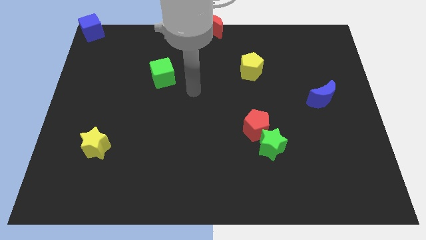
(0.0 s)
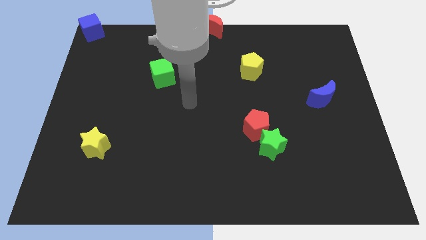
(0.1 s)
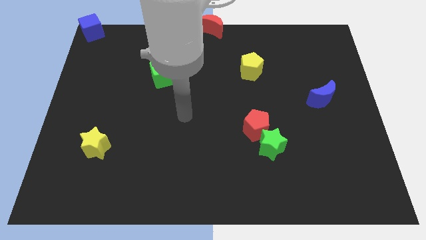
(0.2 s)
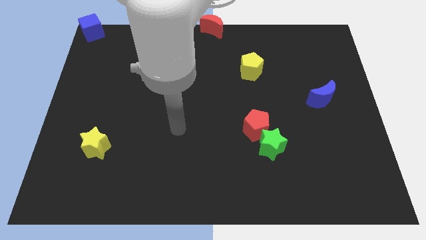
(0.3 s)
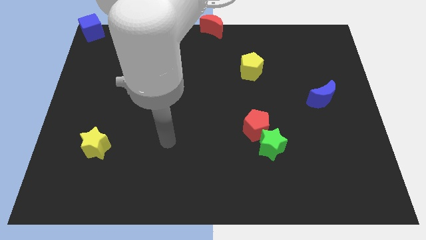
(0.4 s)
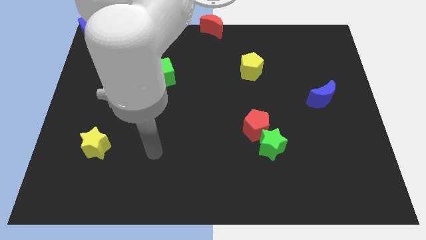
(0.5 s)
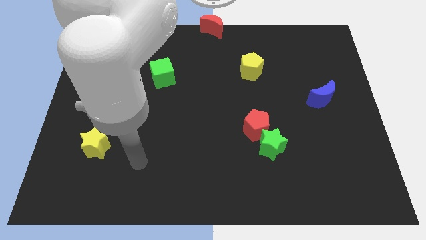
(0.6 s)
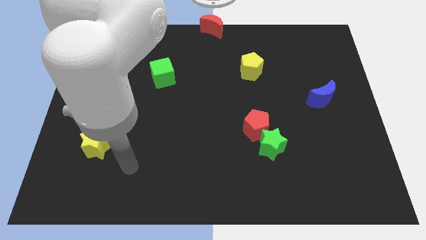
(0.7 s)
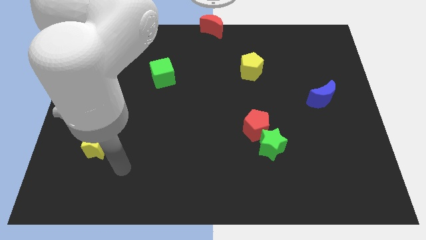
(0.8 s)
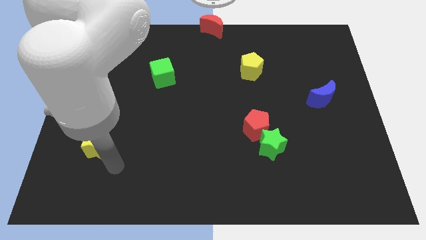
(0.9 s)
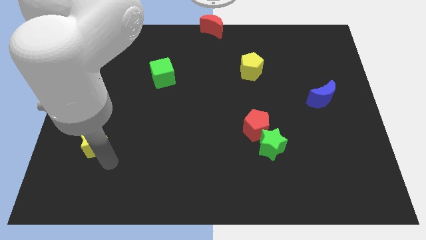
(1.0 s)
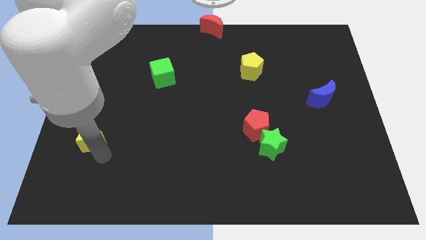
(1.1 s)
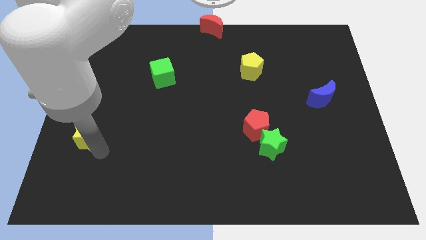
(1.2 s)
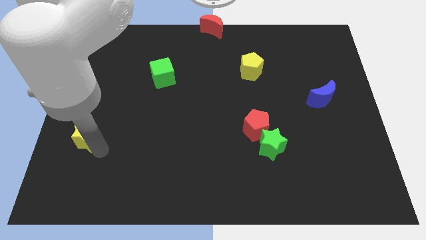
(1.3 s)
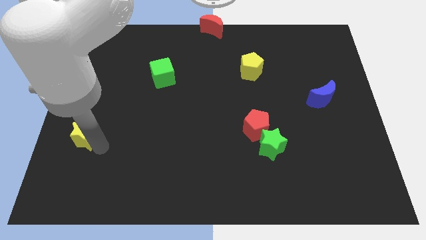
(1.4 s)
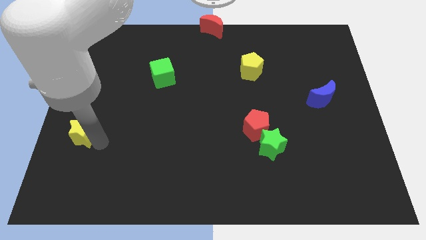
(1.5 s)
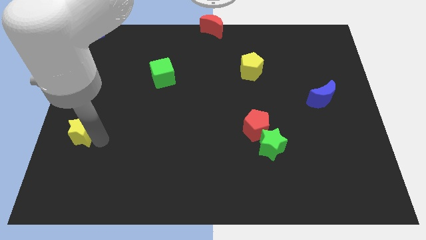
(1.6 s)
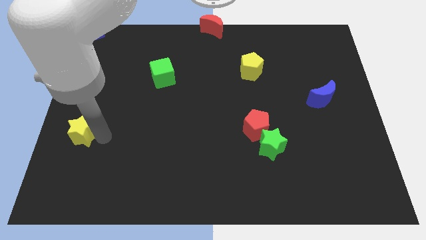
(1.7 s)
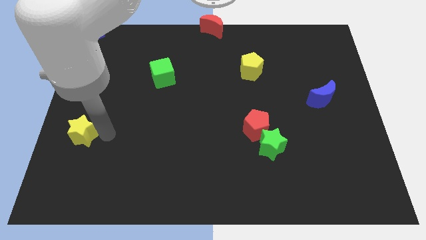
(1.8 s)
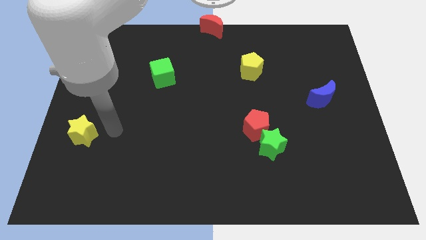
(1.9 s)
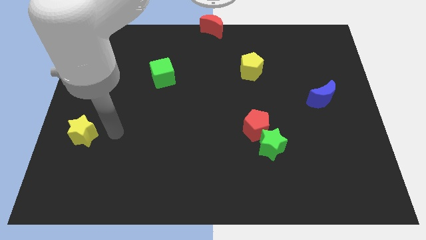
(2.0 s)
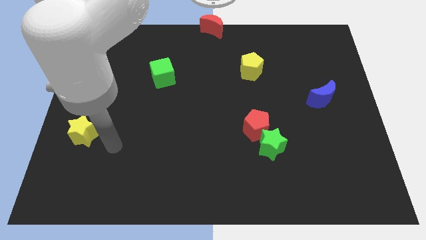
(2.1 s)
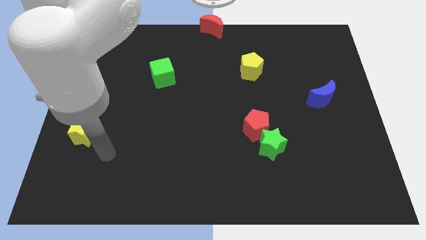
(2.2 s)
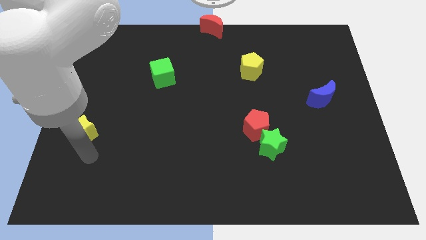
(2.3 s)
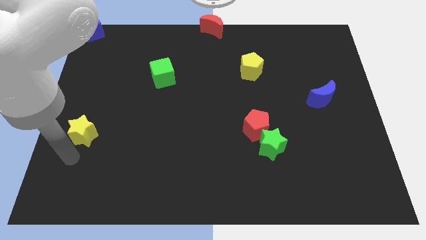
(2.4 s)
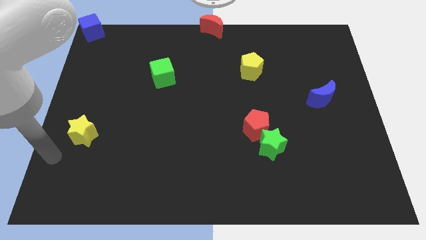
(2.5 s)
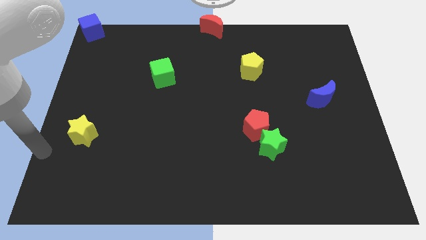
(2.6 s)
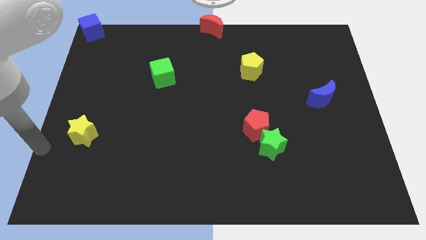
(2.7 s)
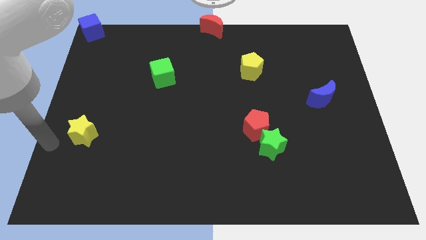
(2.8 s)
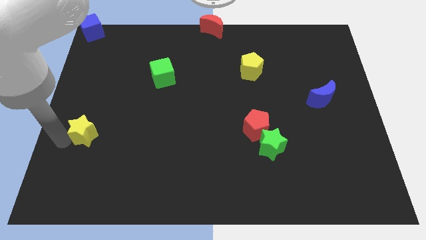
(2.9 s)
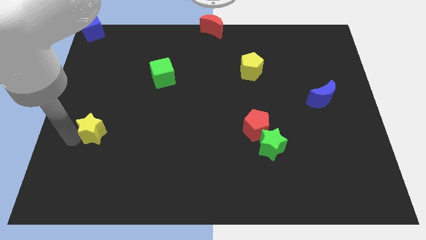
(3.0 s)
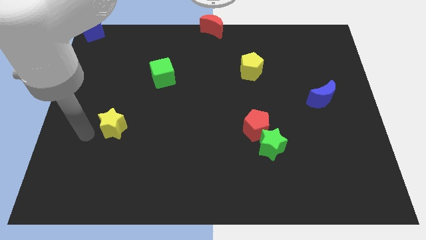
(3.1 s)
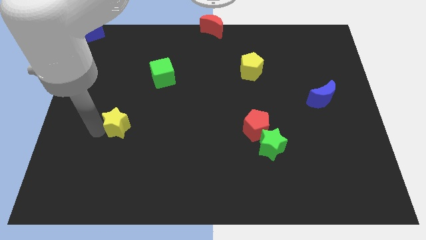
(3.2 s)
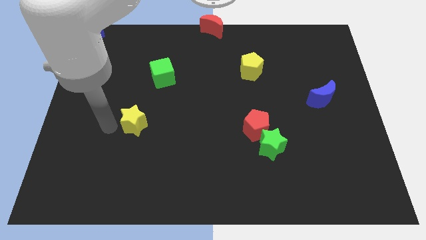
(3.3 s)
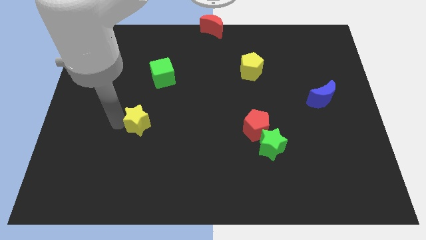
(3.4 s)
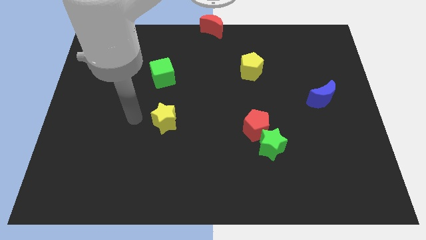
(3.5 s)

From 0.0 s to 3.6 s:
put the yellow star below the green cube

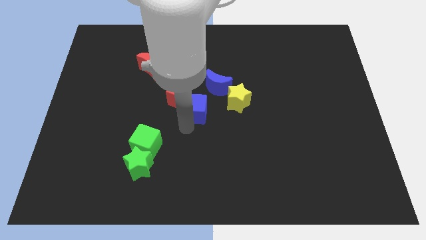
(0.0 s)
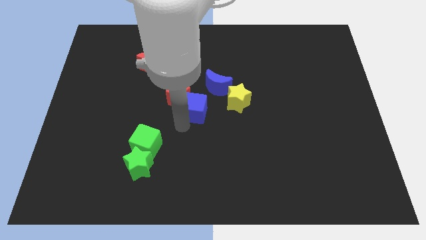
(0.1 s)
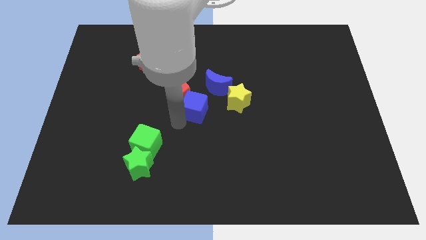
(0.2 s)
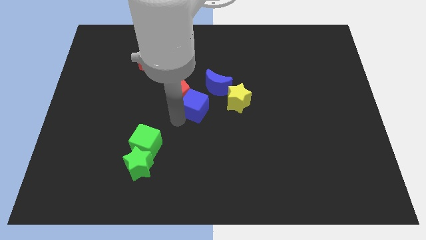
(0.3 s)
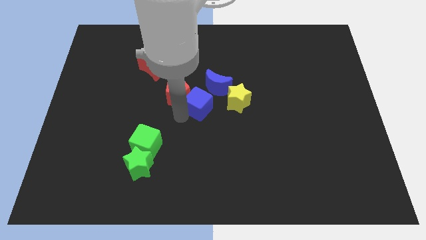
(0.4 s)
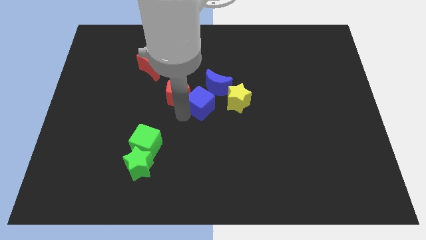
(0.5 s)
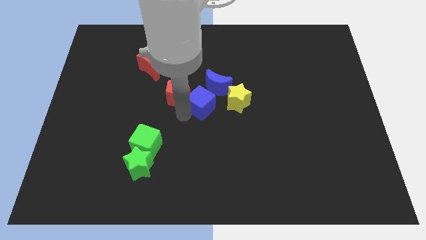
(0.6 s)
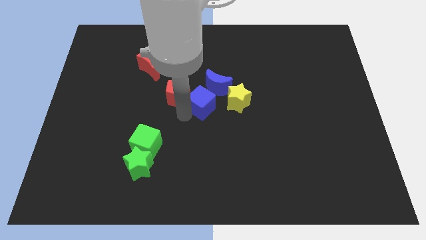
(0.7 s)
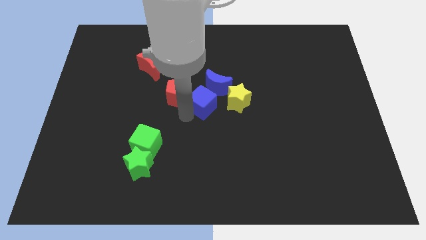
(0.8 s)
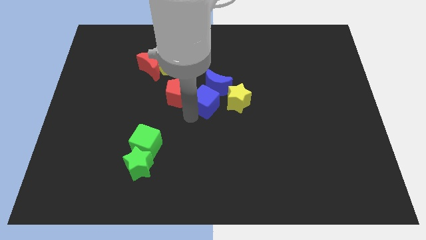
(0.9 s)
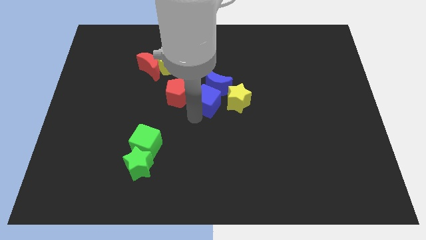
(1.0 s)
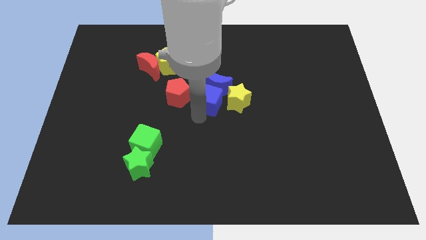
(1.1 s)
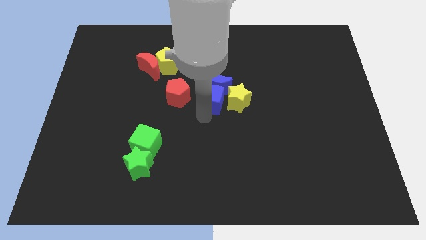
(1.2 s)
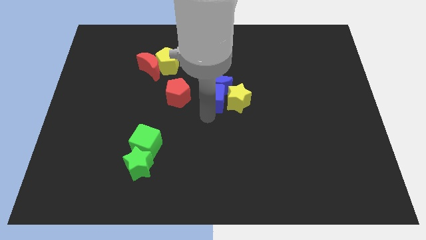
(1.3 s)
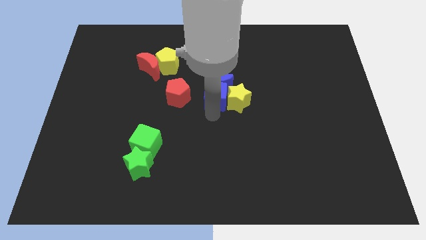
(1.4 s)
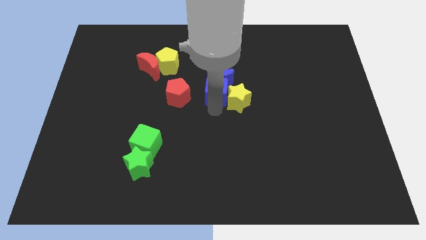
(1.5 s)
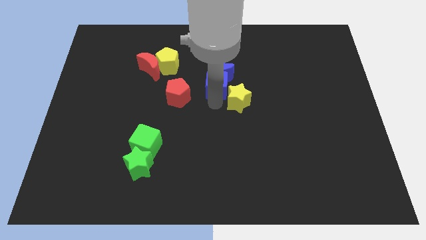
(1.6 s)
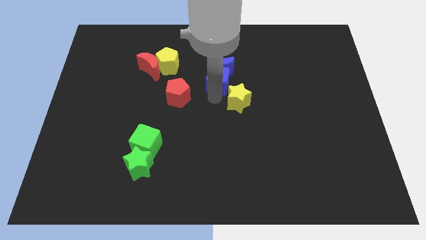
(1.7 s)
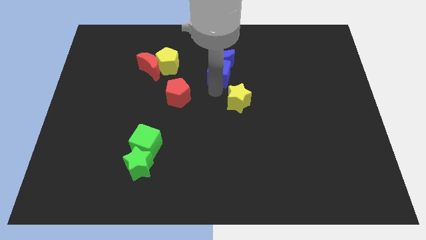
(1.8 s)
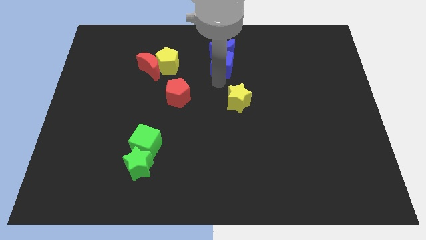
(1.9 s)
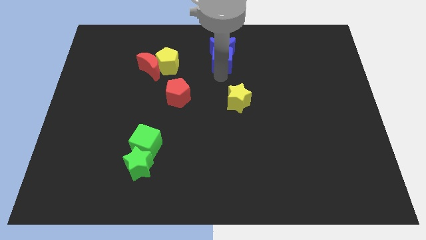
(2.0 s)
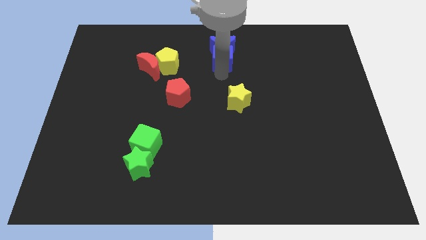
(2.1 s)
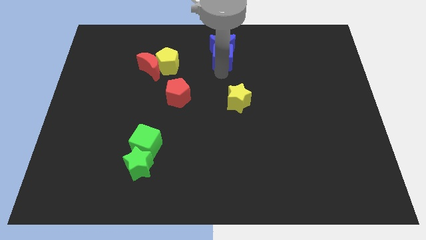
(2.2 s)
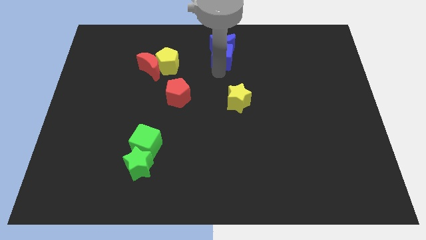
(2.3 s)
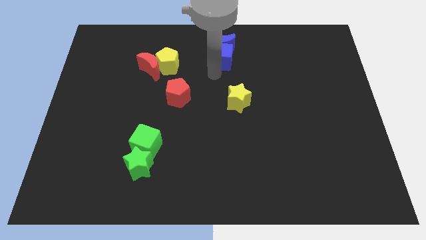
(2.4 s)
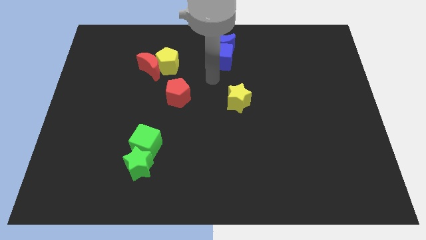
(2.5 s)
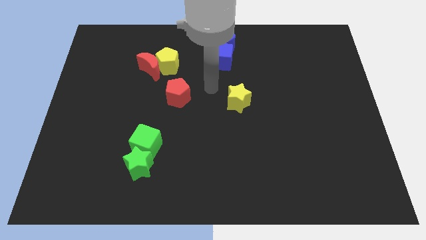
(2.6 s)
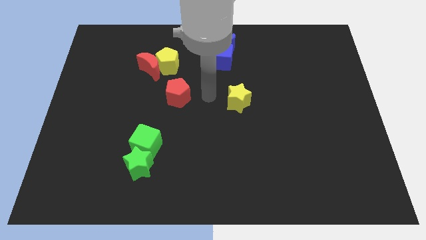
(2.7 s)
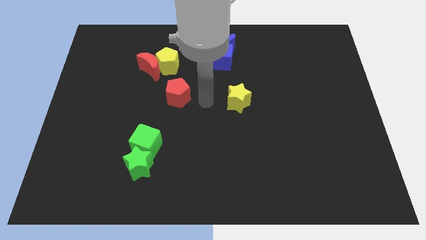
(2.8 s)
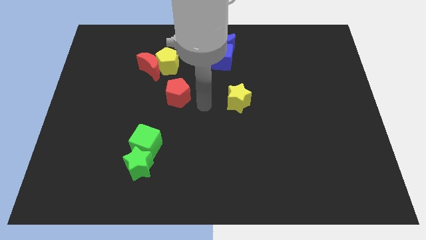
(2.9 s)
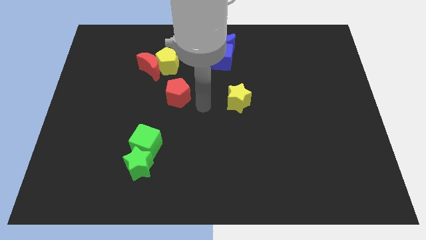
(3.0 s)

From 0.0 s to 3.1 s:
move the blue blocks towards the top center

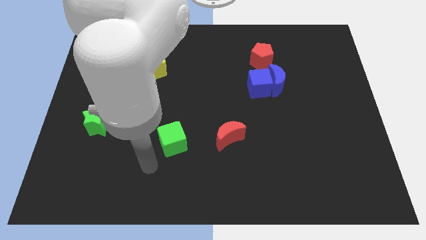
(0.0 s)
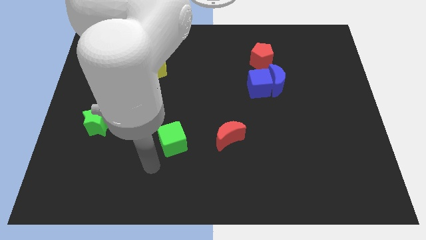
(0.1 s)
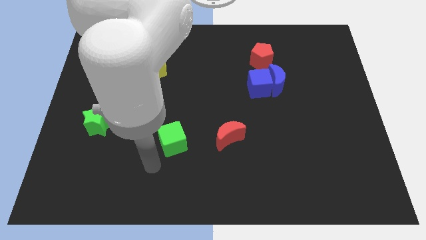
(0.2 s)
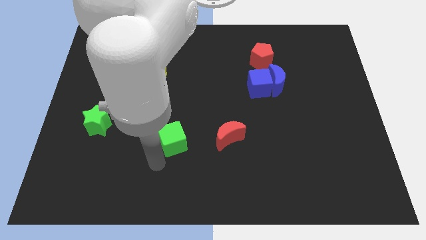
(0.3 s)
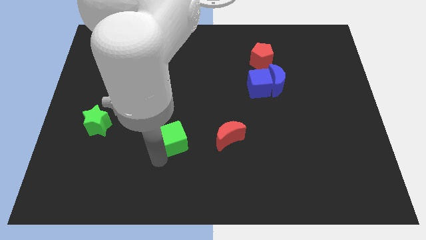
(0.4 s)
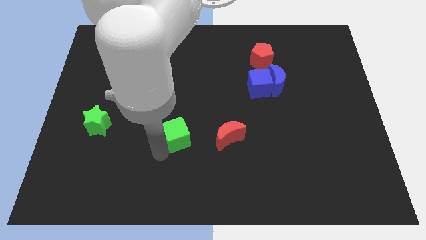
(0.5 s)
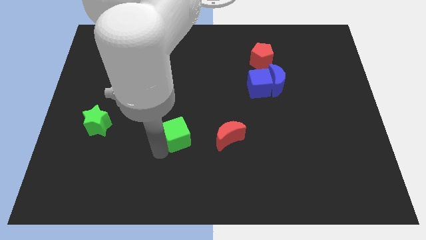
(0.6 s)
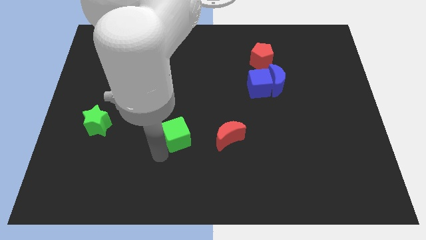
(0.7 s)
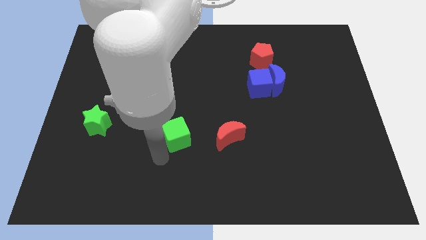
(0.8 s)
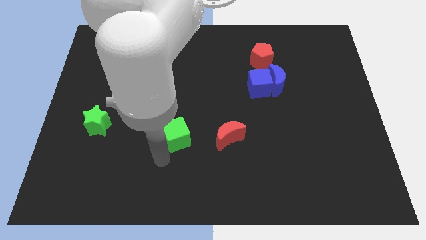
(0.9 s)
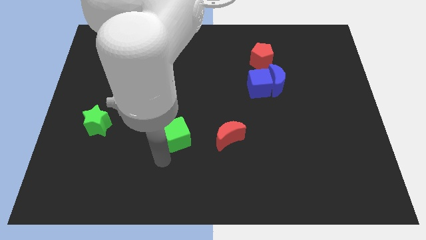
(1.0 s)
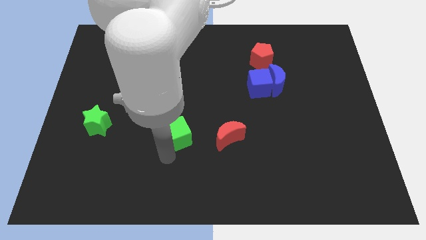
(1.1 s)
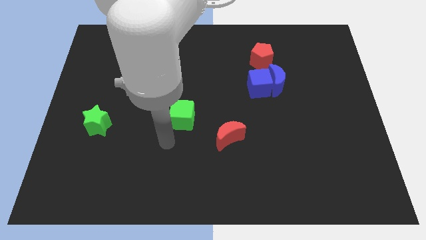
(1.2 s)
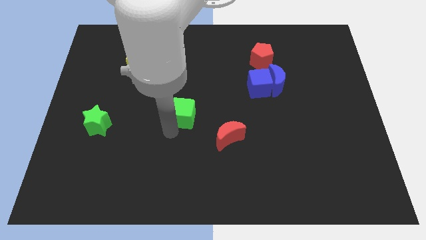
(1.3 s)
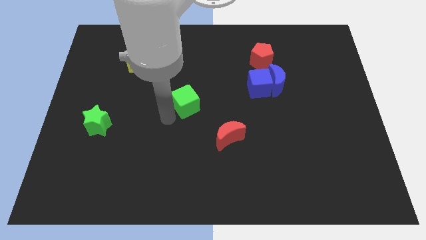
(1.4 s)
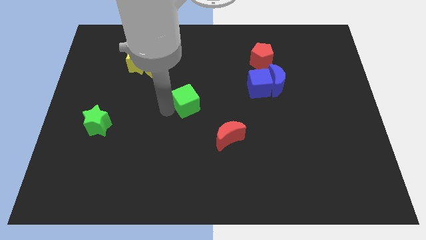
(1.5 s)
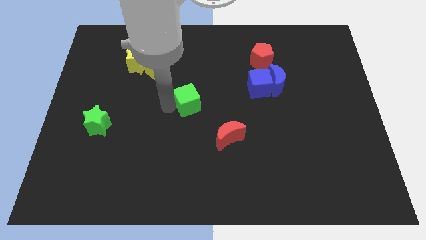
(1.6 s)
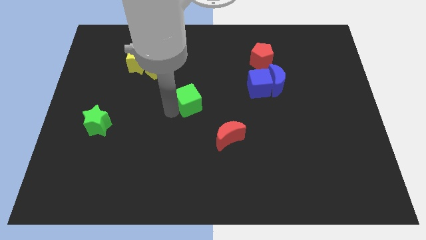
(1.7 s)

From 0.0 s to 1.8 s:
push green cube to the middle of the board

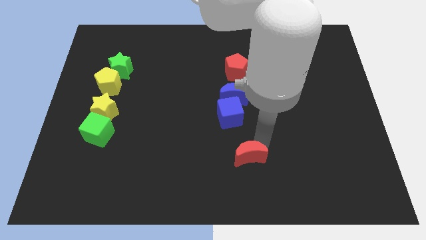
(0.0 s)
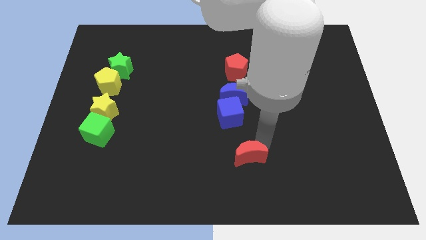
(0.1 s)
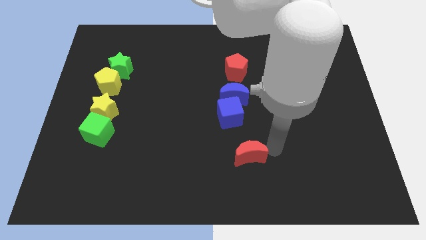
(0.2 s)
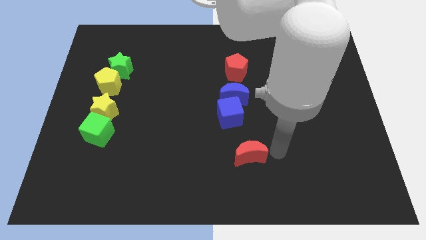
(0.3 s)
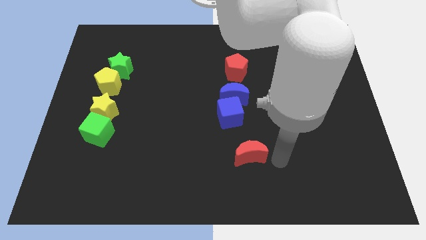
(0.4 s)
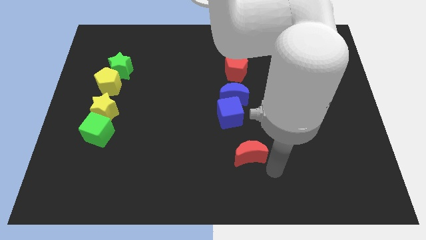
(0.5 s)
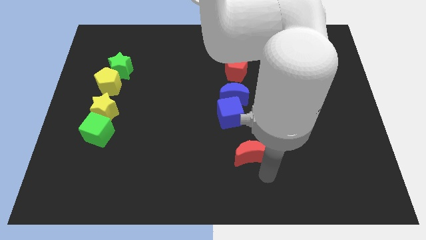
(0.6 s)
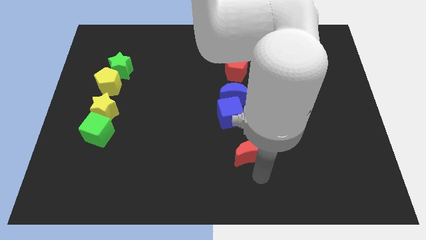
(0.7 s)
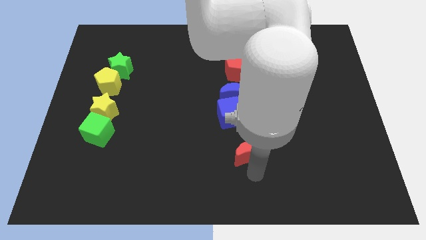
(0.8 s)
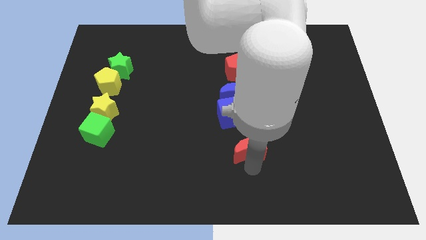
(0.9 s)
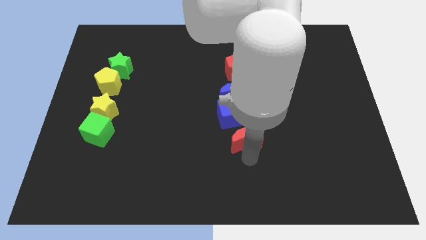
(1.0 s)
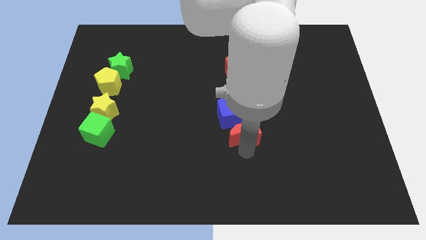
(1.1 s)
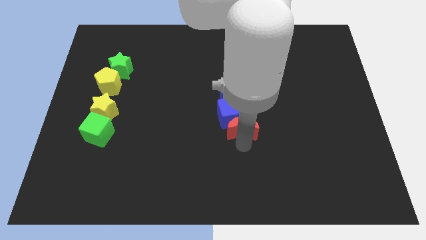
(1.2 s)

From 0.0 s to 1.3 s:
place red crescent below blue cube
